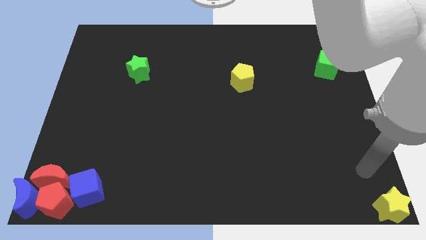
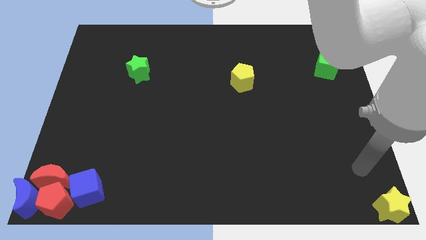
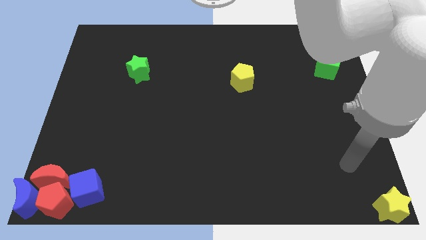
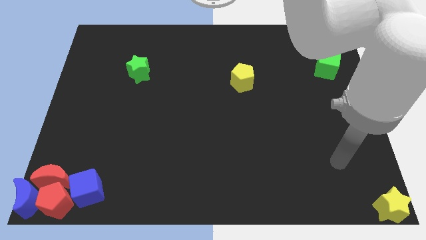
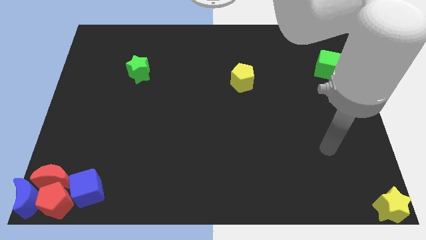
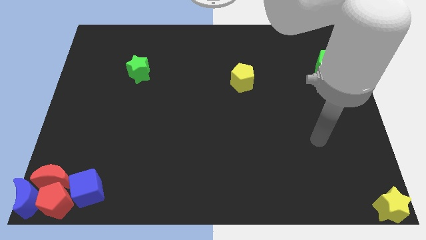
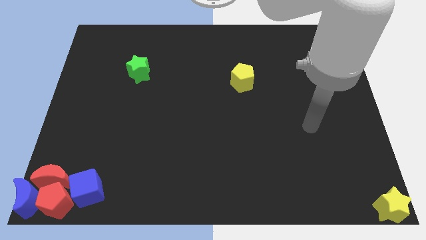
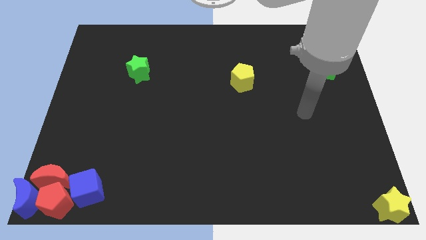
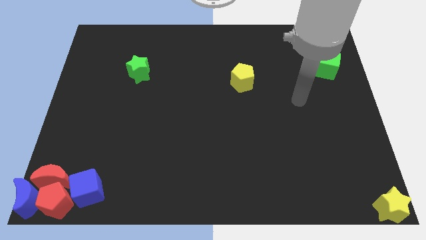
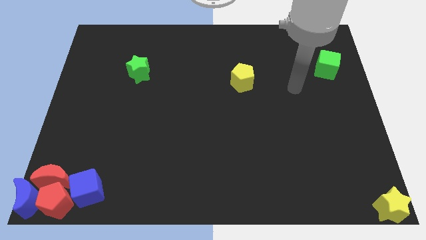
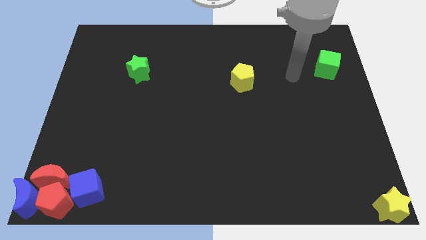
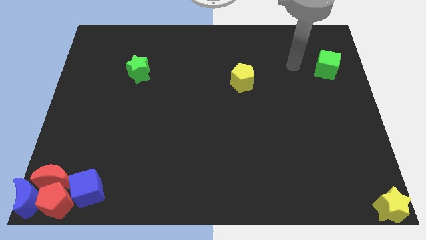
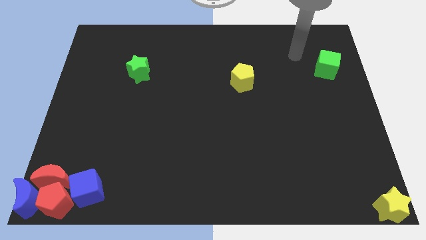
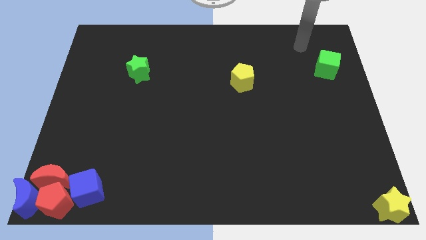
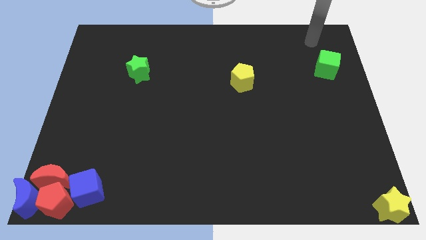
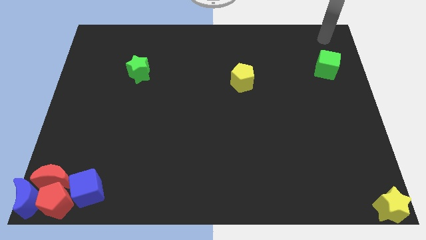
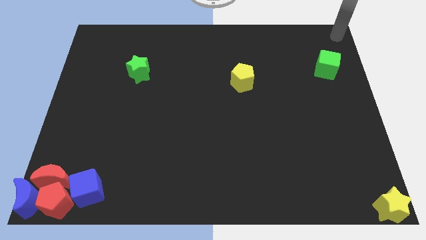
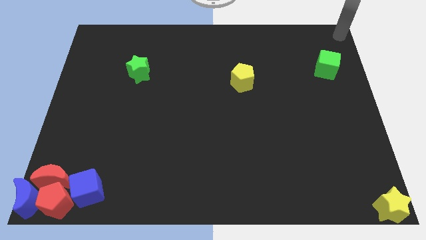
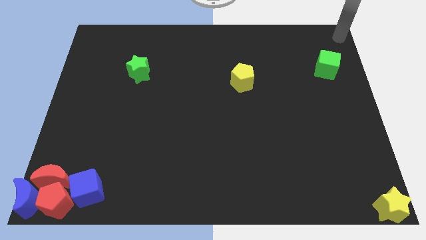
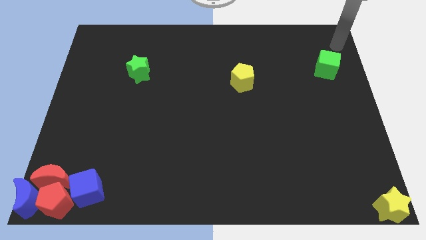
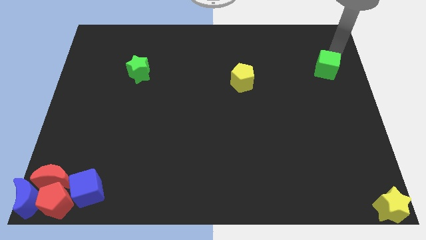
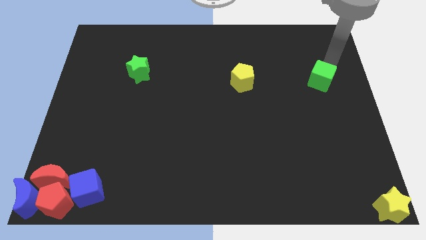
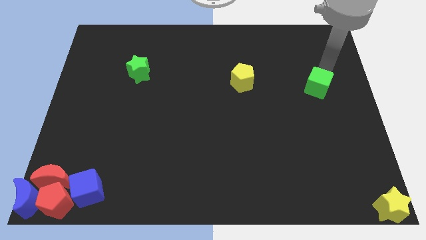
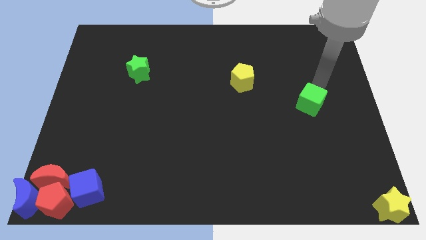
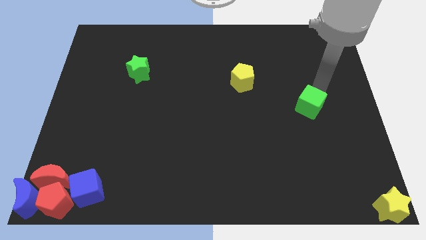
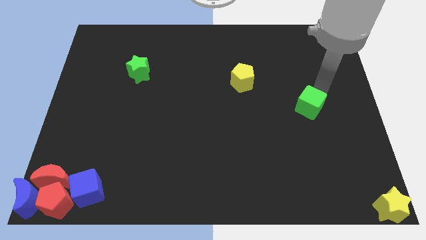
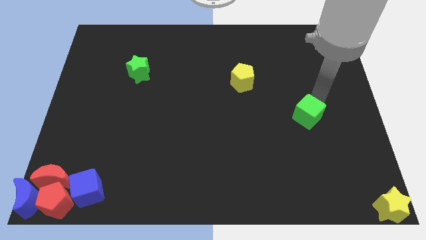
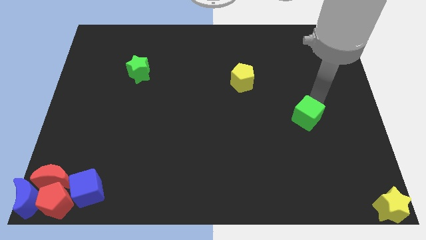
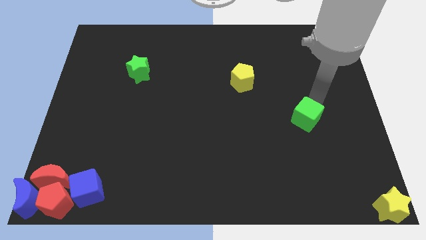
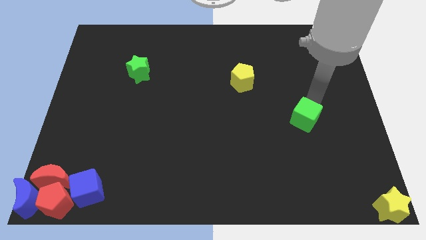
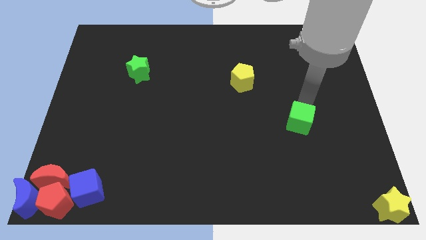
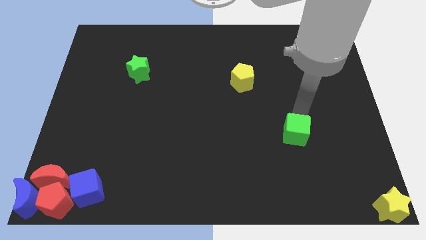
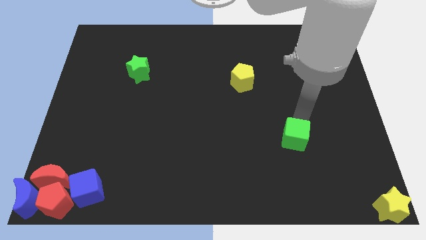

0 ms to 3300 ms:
place the green cube in between the yellow star and yellow pentagon

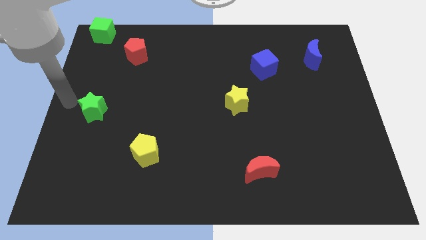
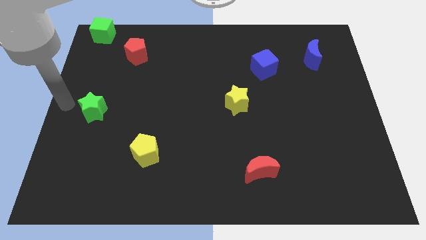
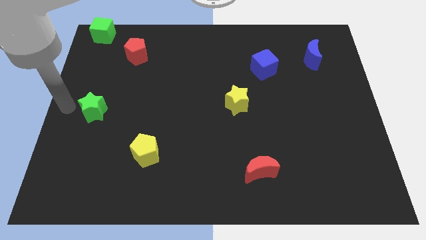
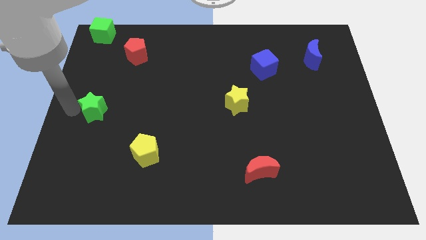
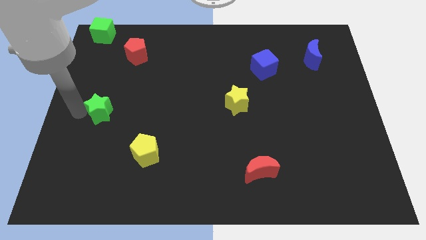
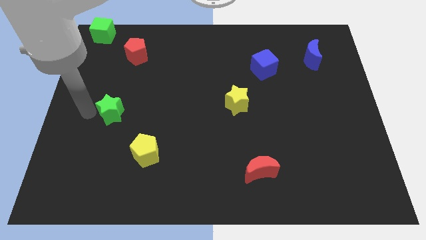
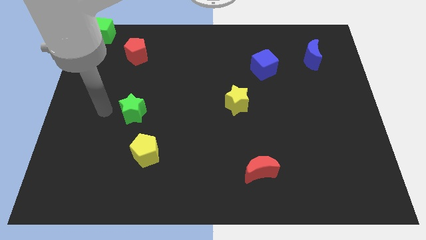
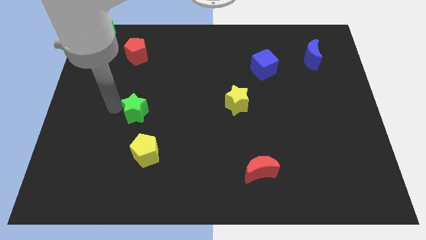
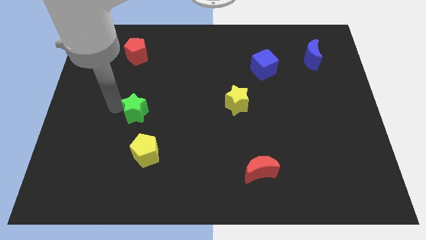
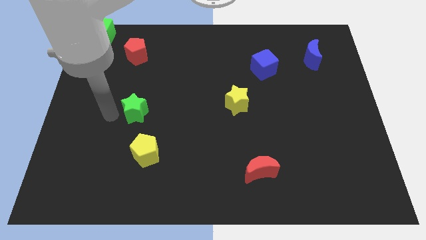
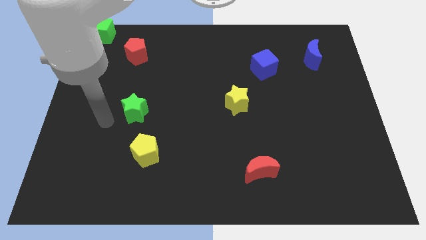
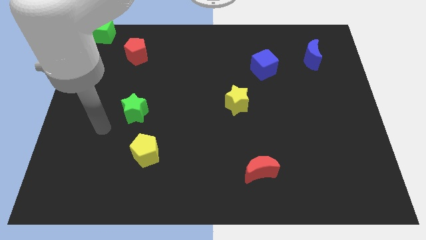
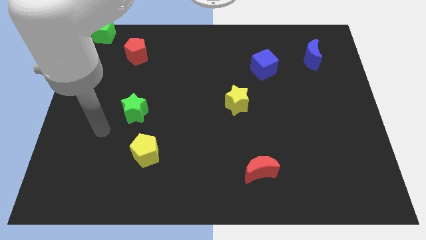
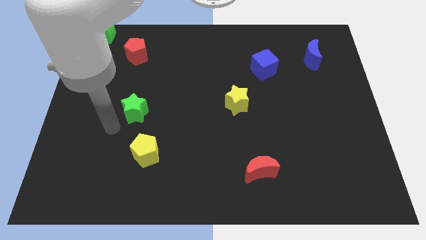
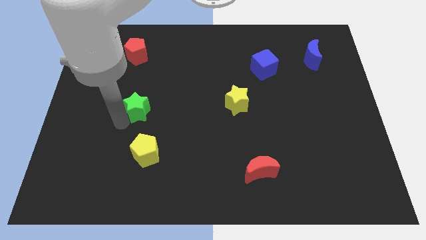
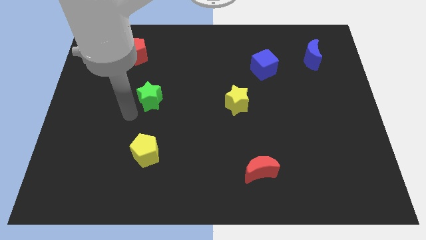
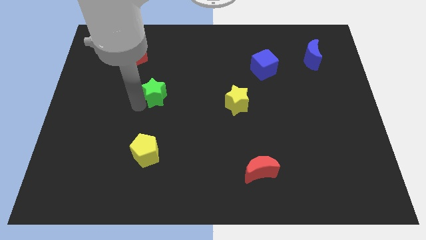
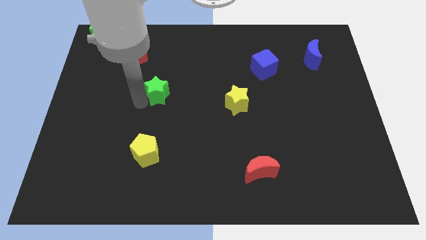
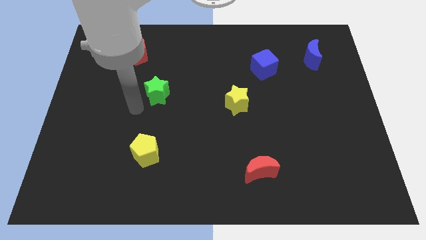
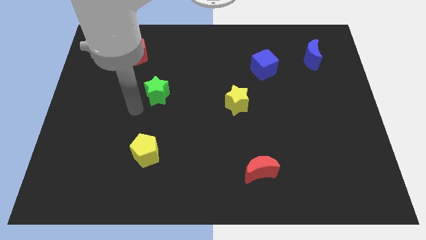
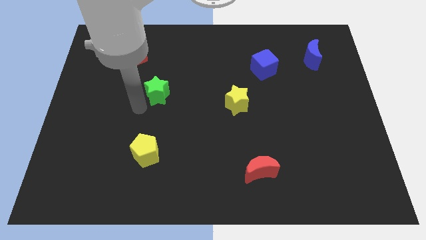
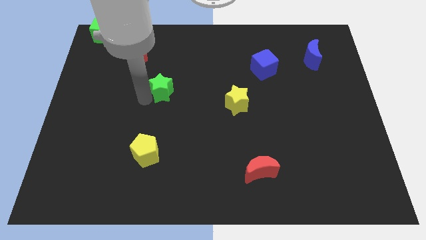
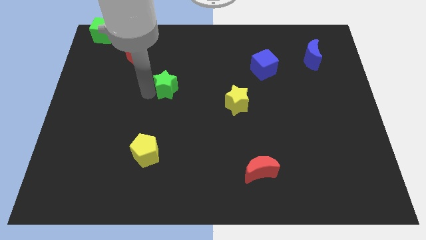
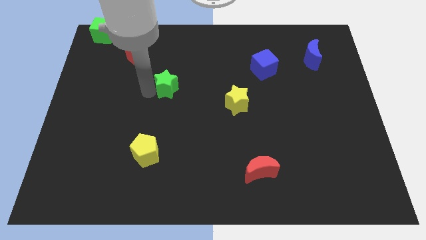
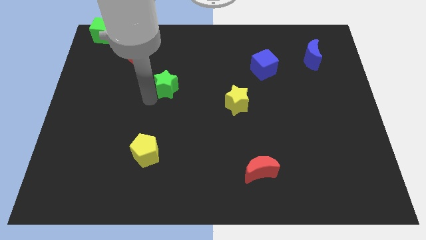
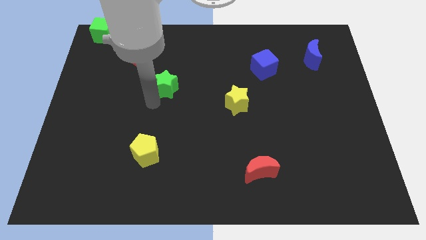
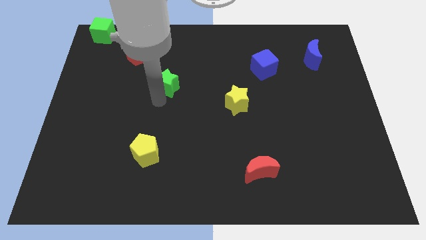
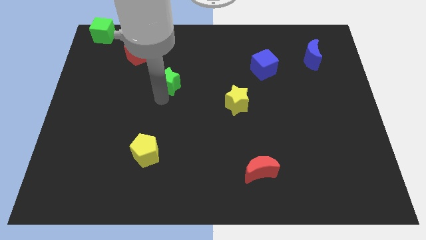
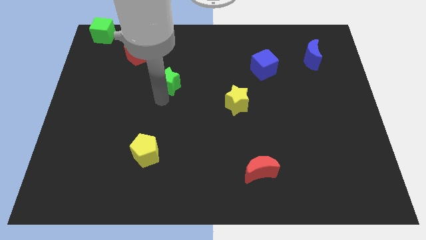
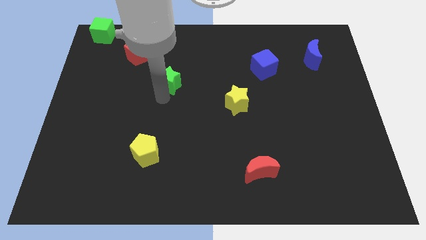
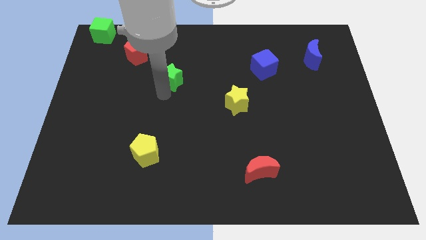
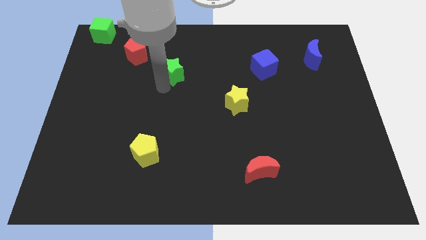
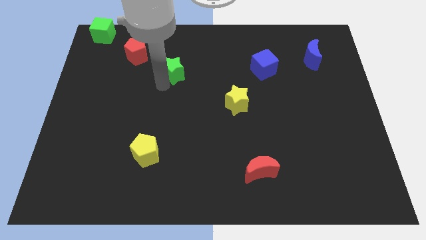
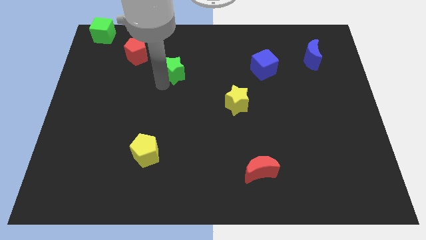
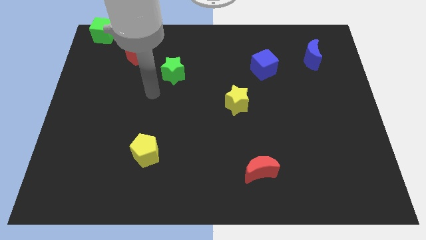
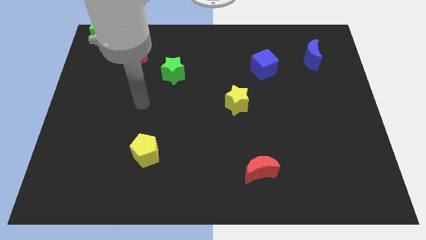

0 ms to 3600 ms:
move green star in between red pentagon and yellow star

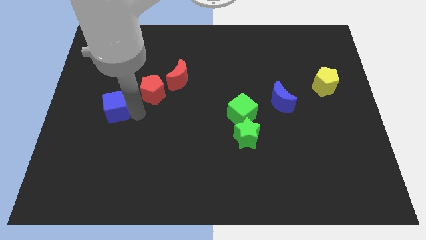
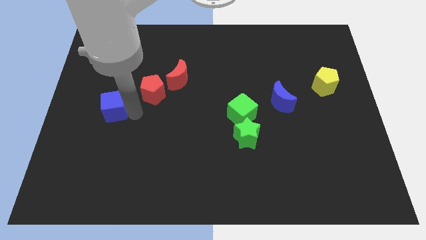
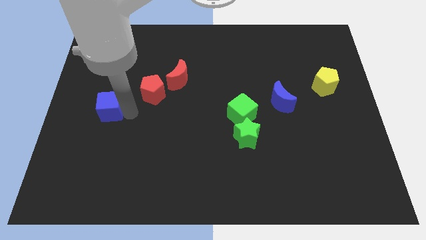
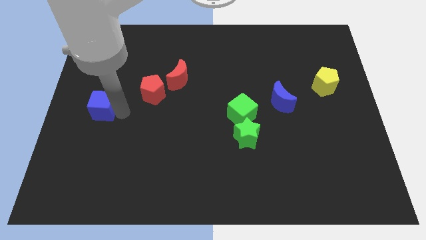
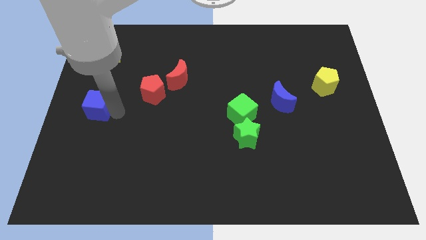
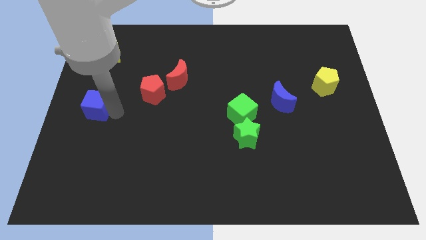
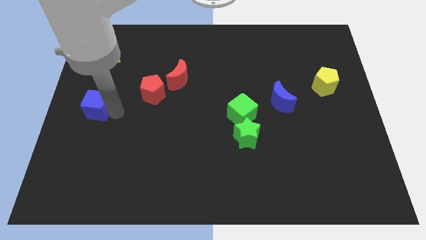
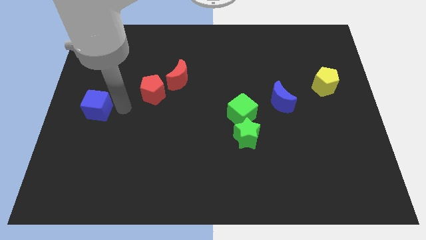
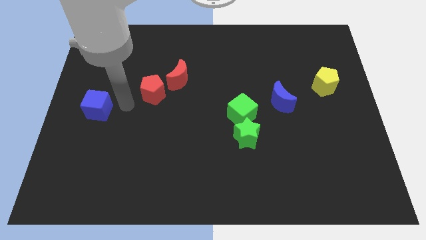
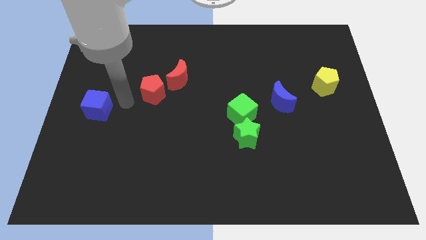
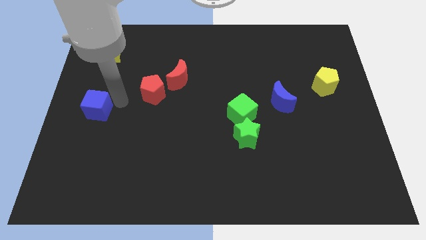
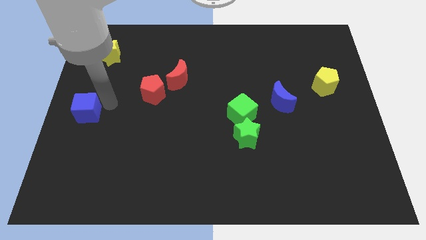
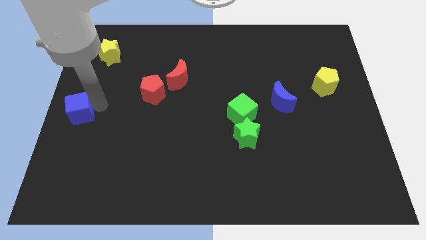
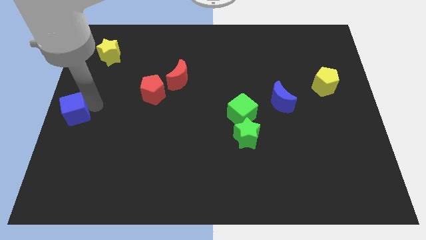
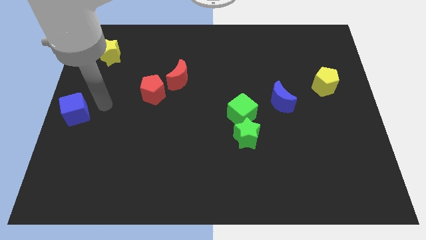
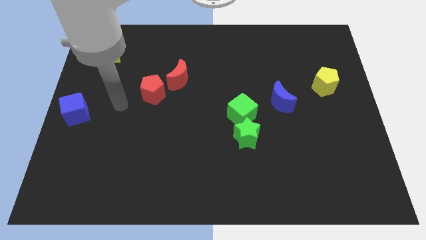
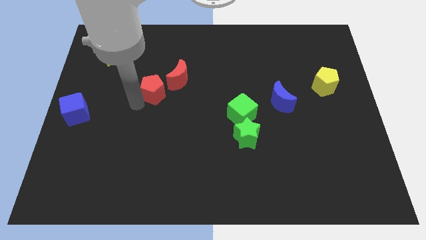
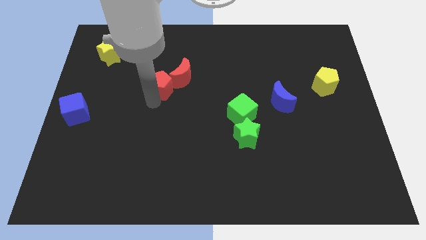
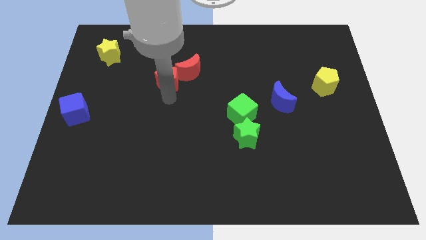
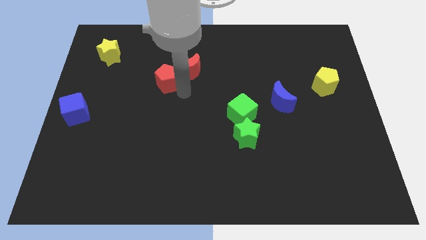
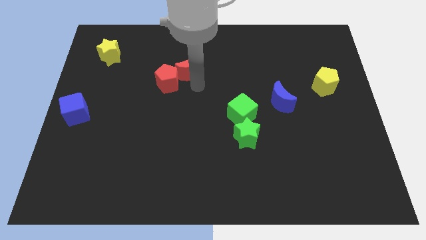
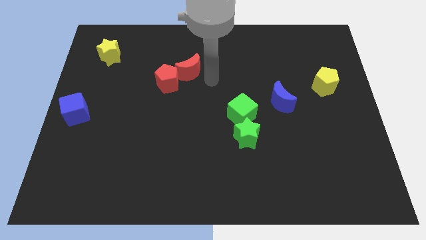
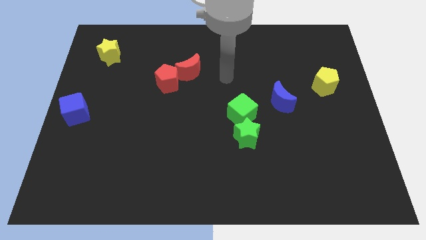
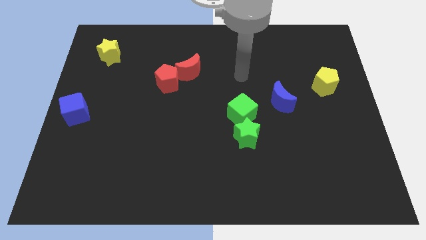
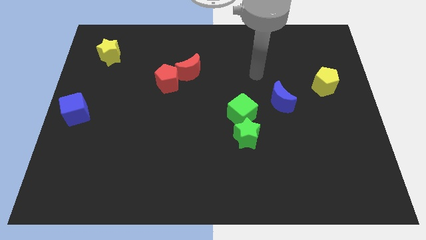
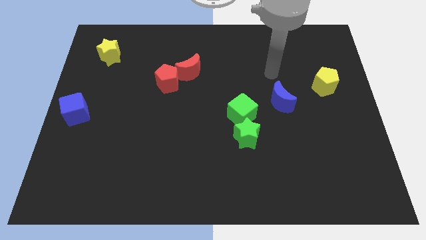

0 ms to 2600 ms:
push the blue cube to the center left of the board
